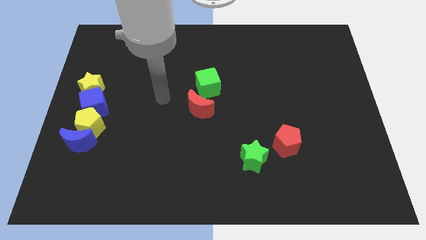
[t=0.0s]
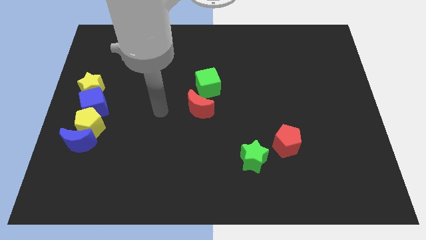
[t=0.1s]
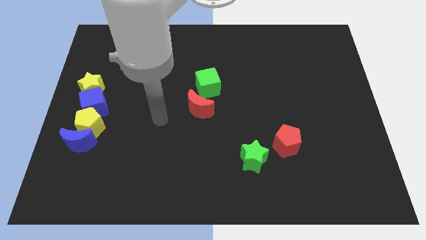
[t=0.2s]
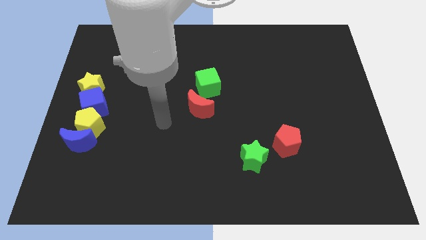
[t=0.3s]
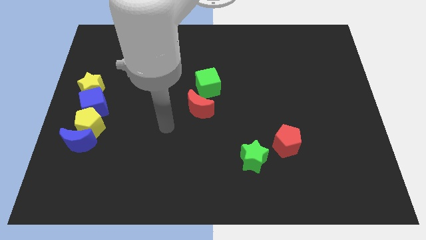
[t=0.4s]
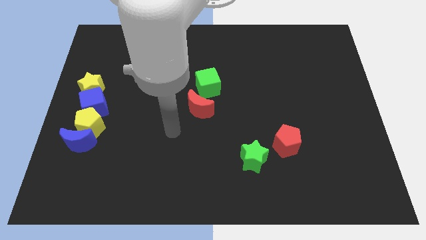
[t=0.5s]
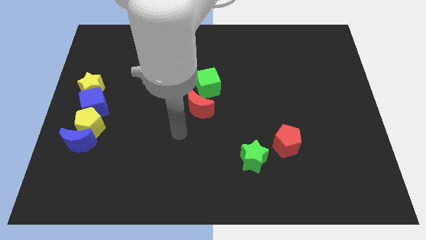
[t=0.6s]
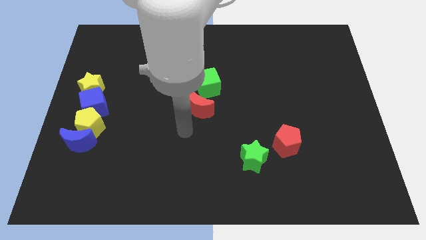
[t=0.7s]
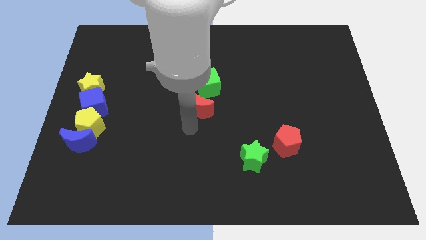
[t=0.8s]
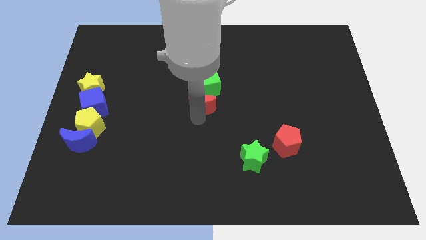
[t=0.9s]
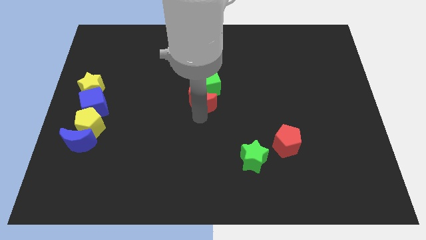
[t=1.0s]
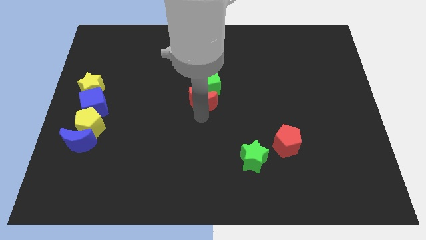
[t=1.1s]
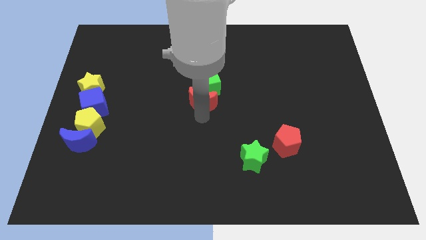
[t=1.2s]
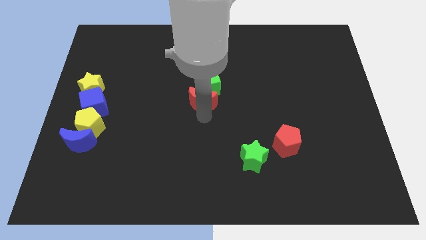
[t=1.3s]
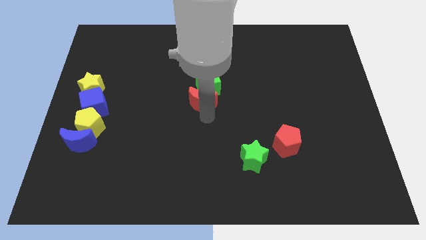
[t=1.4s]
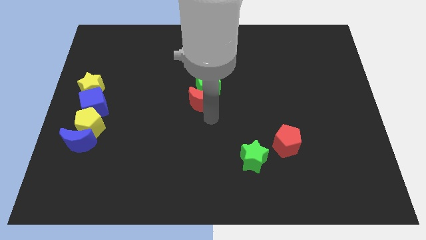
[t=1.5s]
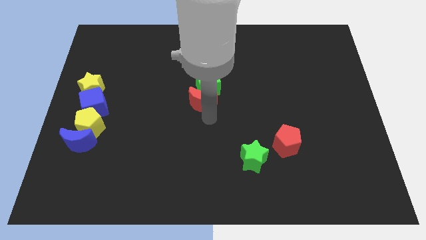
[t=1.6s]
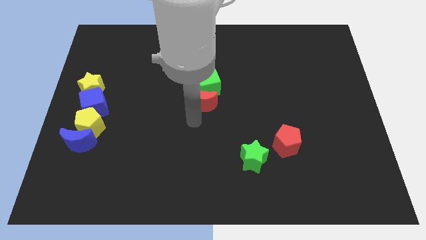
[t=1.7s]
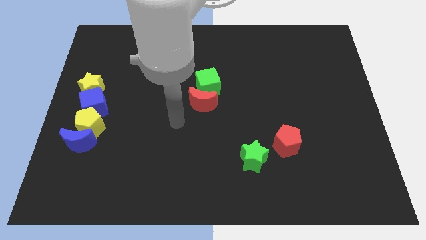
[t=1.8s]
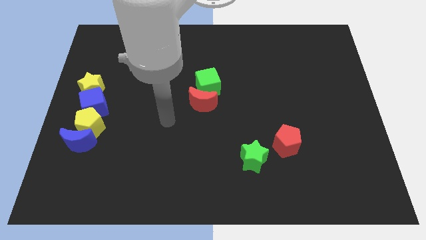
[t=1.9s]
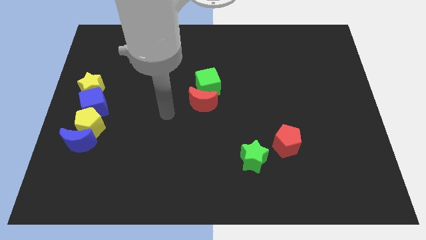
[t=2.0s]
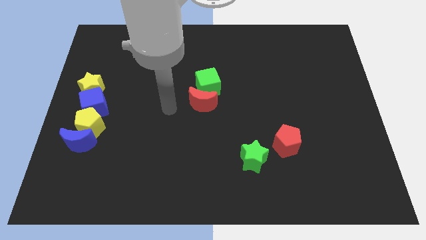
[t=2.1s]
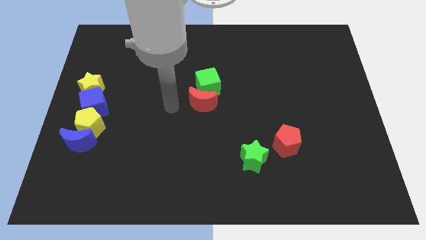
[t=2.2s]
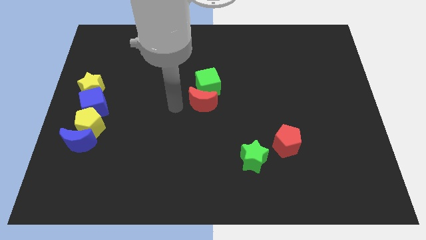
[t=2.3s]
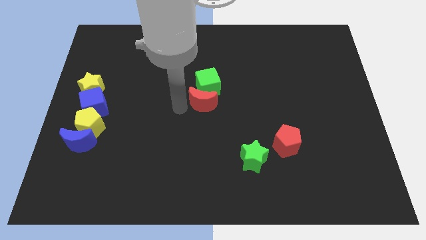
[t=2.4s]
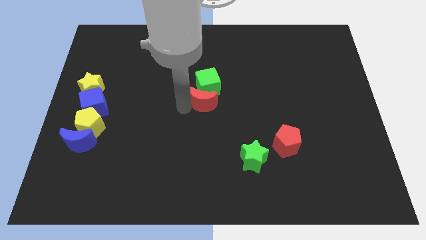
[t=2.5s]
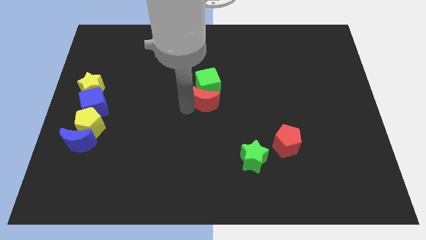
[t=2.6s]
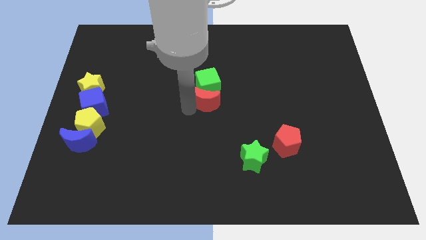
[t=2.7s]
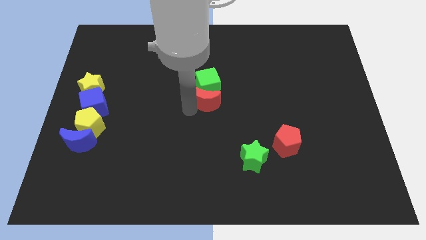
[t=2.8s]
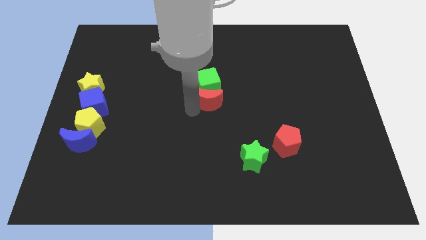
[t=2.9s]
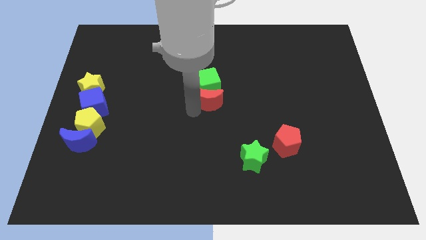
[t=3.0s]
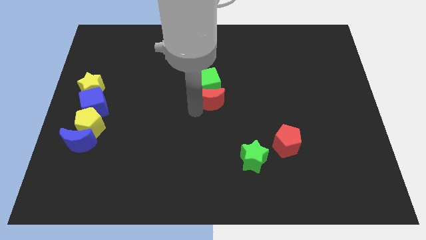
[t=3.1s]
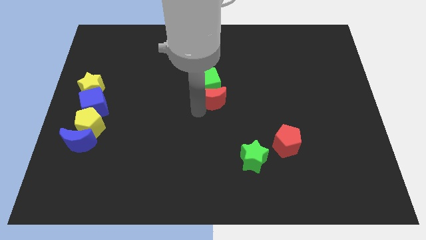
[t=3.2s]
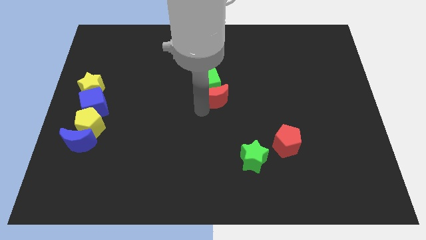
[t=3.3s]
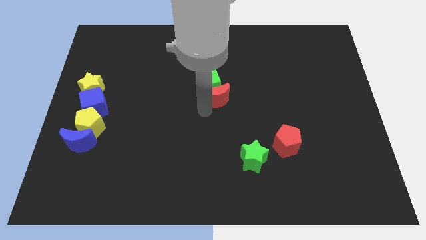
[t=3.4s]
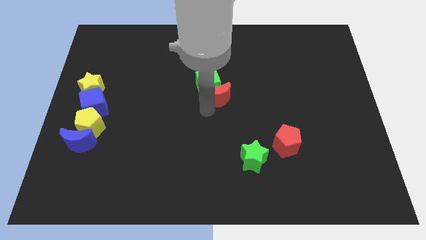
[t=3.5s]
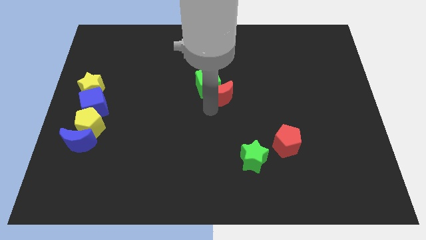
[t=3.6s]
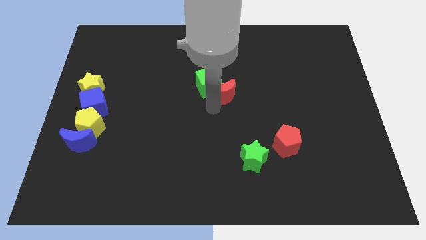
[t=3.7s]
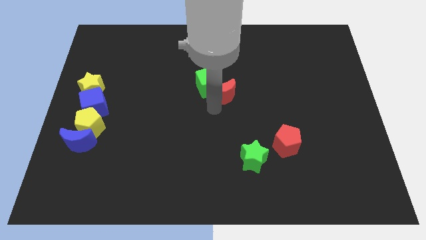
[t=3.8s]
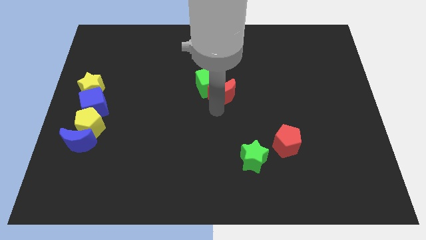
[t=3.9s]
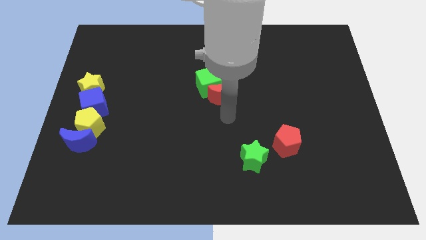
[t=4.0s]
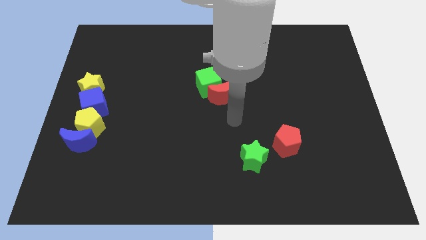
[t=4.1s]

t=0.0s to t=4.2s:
move the red crescent into the green cube

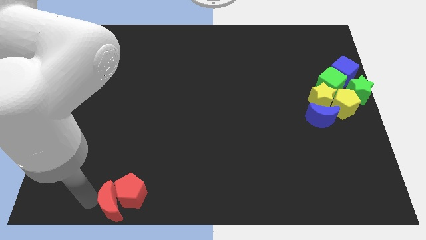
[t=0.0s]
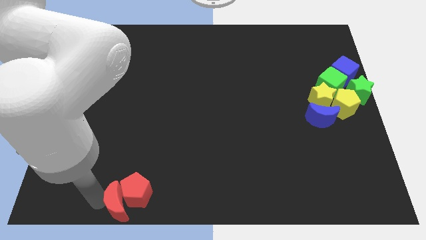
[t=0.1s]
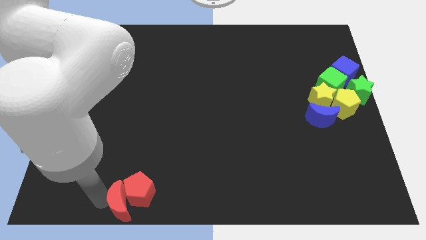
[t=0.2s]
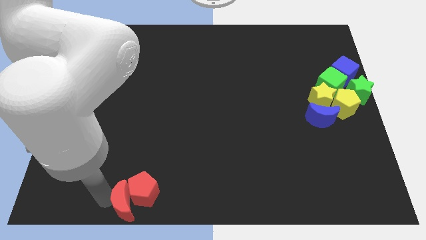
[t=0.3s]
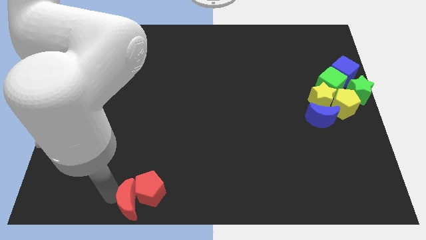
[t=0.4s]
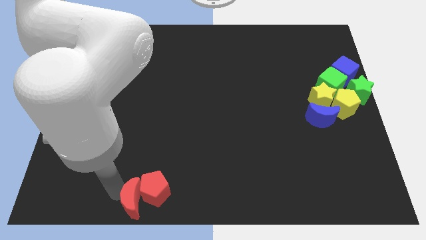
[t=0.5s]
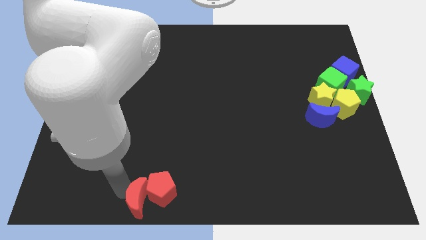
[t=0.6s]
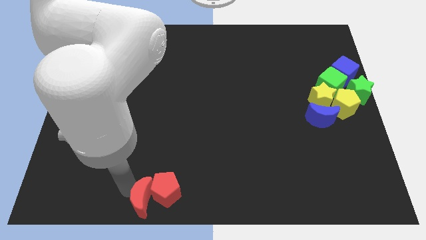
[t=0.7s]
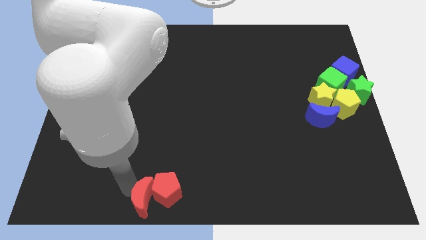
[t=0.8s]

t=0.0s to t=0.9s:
push the red blocks towards the bottom center of the board

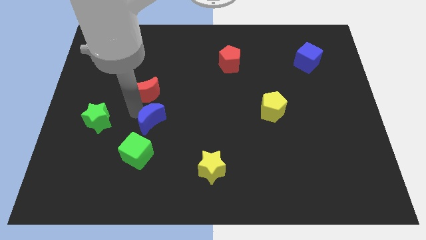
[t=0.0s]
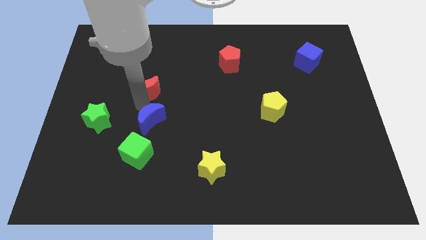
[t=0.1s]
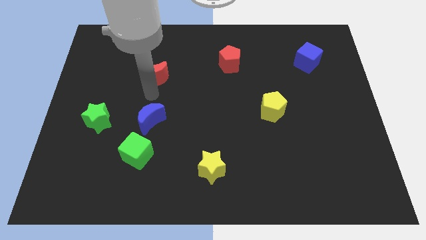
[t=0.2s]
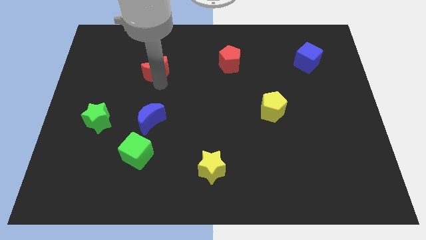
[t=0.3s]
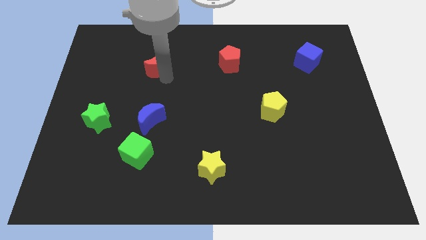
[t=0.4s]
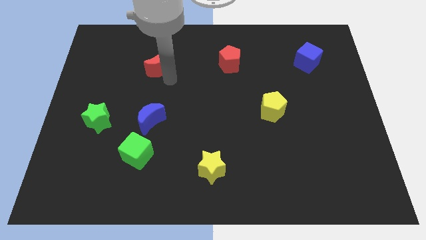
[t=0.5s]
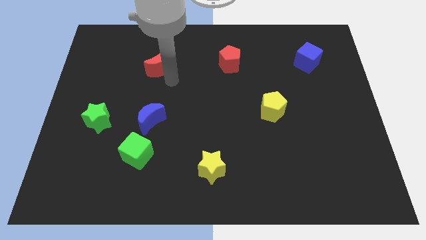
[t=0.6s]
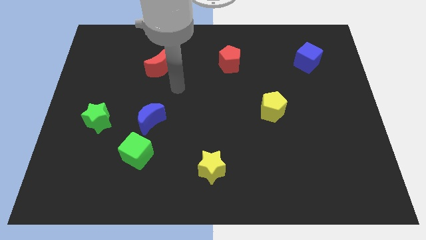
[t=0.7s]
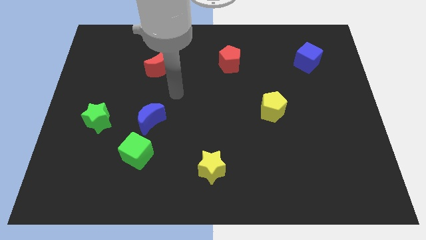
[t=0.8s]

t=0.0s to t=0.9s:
move the red crescent to the left of the red pentagon

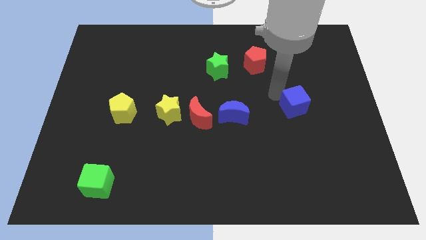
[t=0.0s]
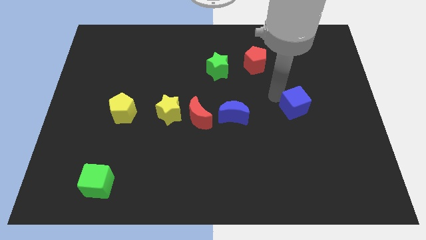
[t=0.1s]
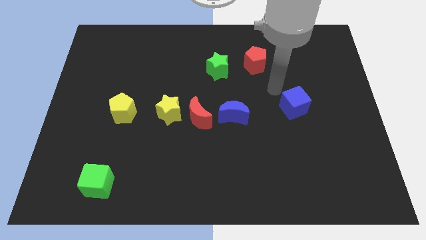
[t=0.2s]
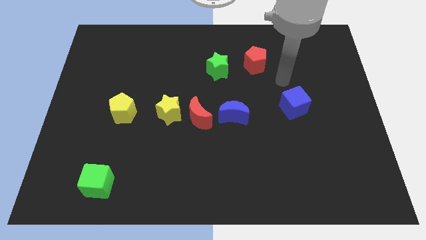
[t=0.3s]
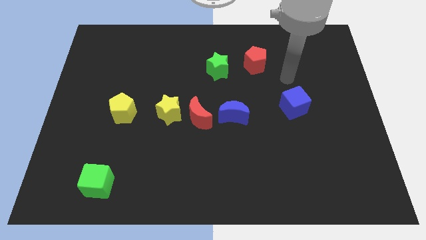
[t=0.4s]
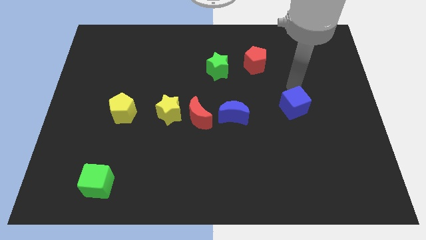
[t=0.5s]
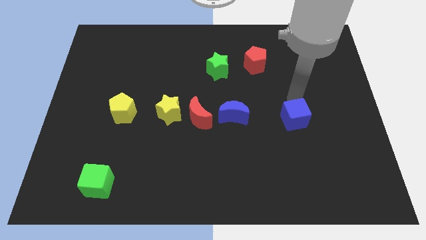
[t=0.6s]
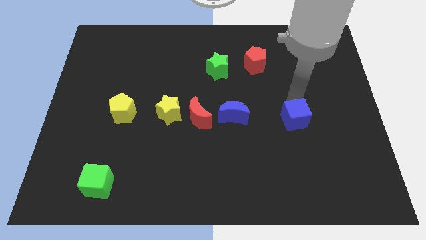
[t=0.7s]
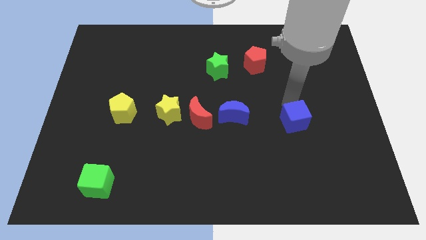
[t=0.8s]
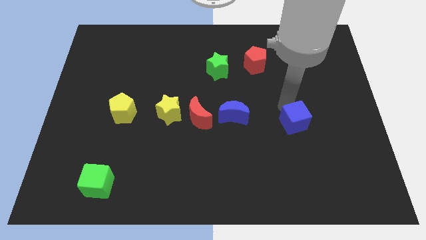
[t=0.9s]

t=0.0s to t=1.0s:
place blue cube parallel right to blue moon

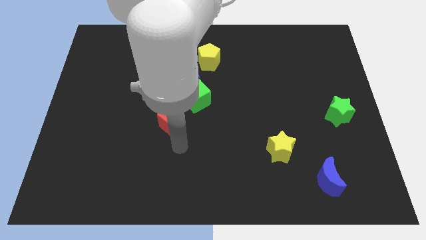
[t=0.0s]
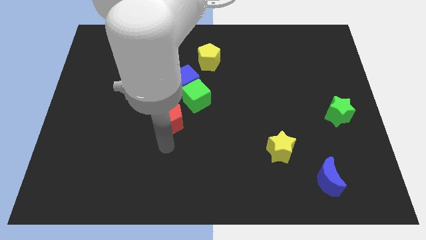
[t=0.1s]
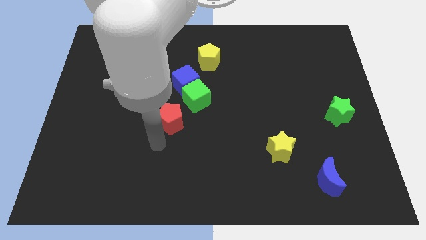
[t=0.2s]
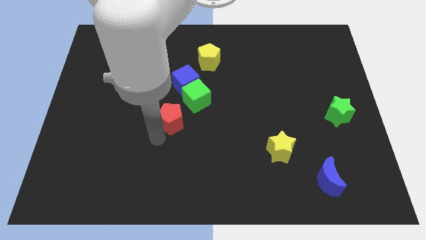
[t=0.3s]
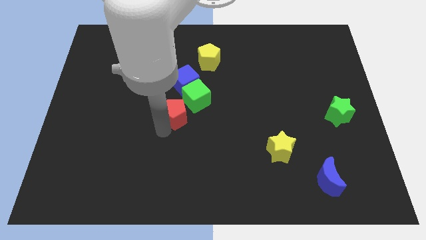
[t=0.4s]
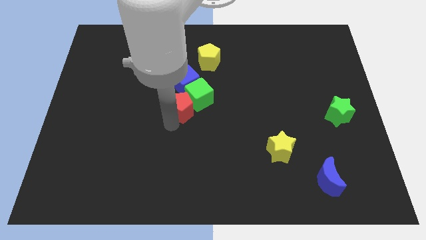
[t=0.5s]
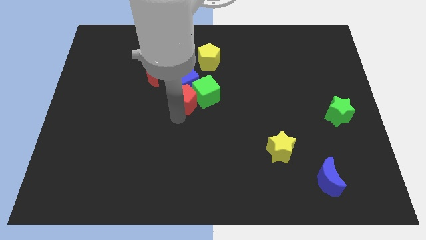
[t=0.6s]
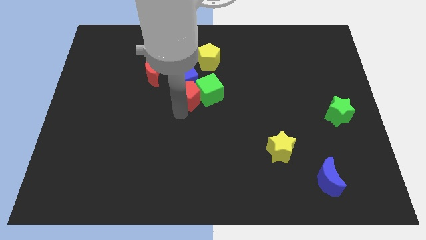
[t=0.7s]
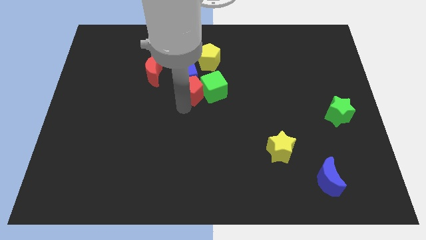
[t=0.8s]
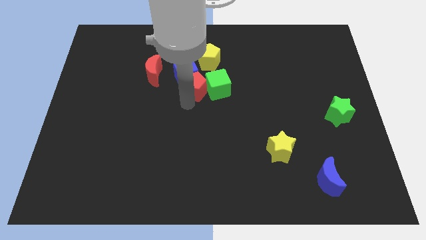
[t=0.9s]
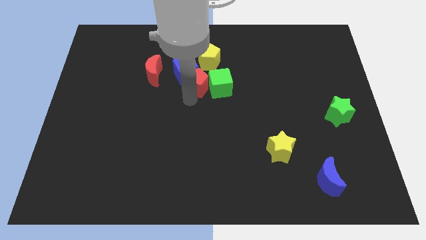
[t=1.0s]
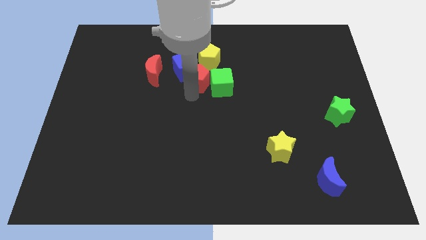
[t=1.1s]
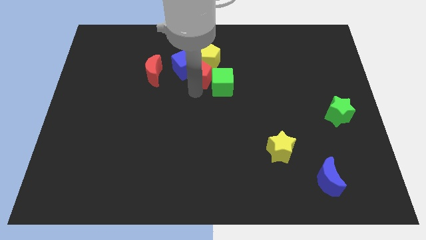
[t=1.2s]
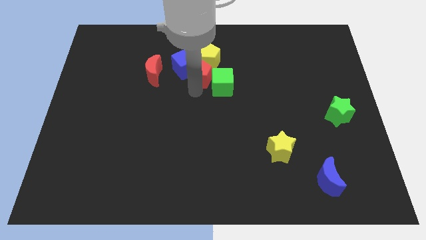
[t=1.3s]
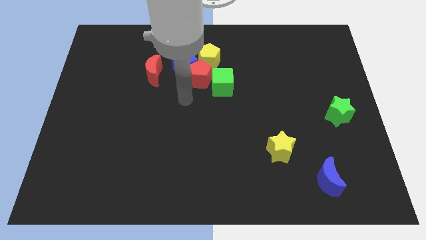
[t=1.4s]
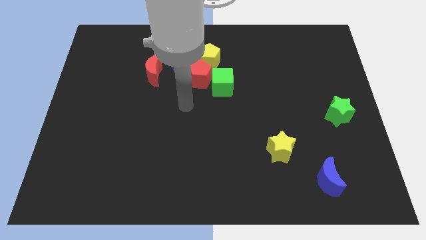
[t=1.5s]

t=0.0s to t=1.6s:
push the red pentagon below the yellow pentagon

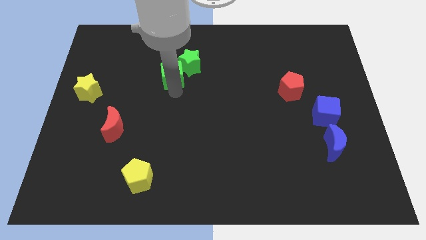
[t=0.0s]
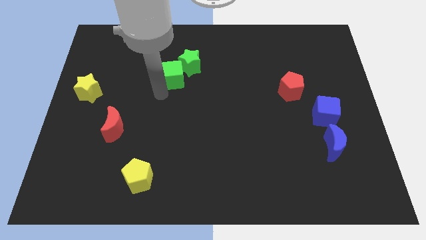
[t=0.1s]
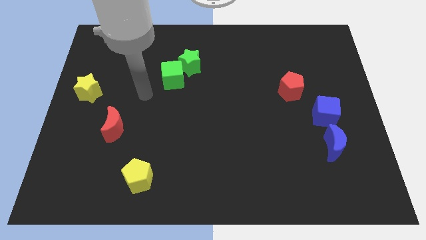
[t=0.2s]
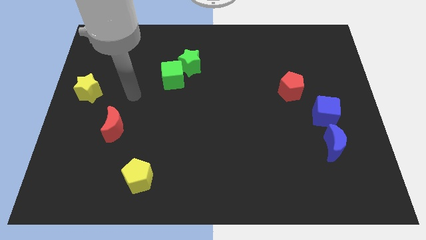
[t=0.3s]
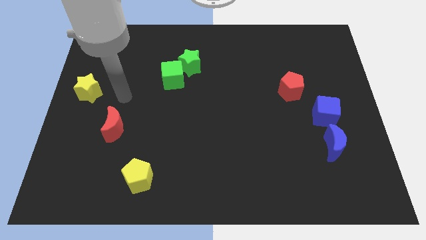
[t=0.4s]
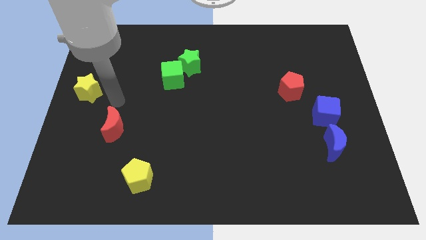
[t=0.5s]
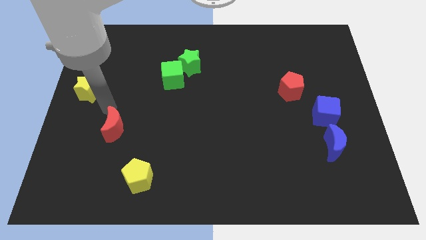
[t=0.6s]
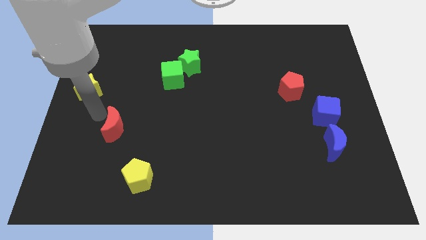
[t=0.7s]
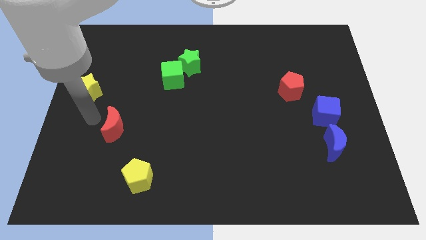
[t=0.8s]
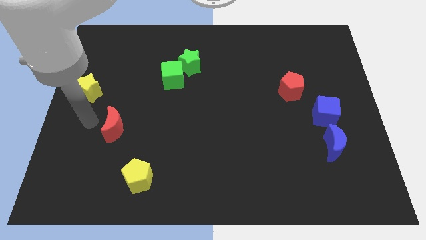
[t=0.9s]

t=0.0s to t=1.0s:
point your arm at the left of the red crescent
